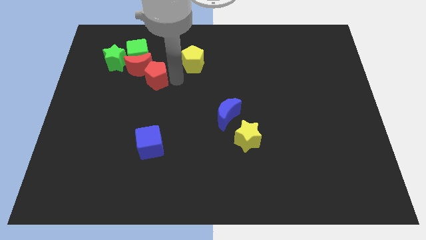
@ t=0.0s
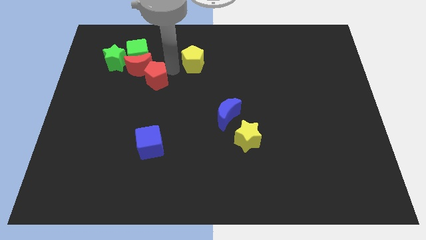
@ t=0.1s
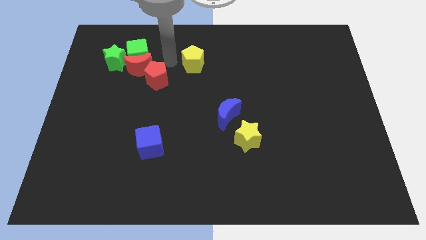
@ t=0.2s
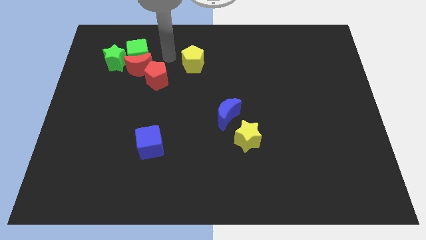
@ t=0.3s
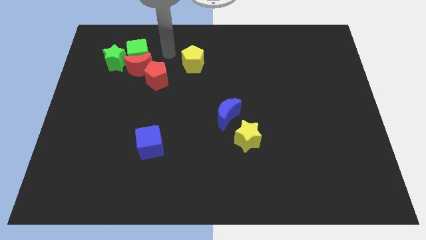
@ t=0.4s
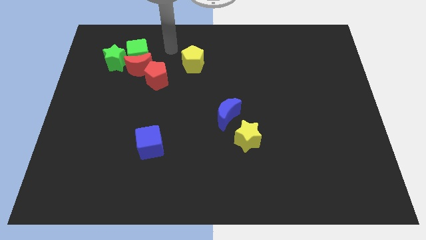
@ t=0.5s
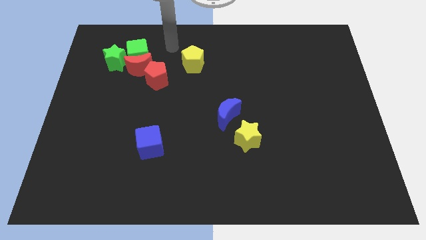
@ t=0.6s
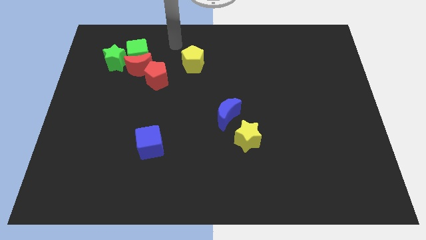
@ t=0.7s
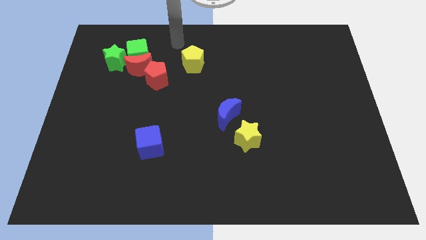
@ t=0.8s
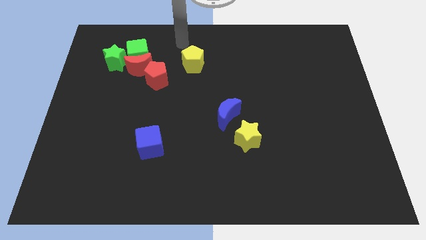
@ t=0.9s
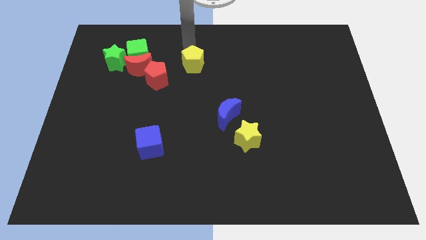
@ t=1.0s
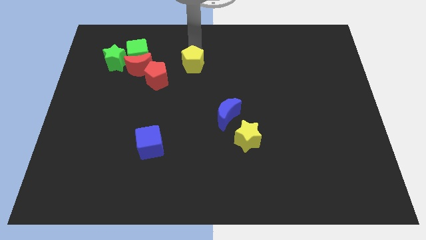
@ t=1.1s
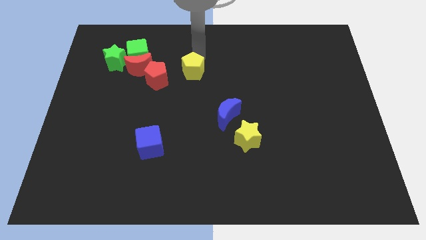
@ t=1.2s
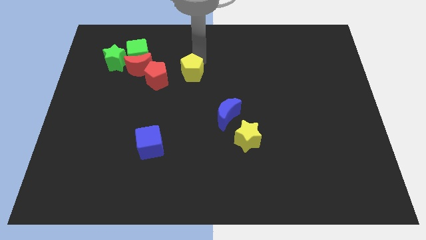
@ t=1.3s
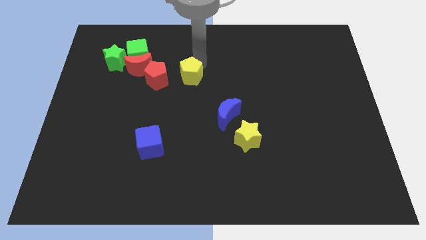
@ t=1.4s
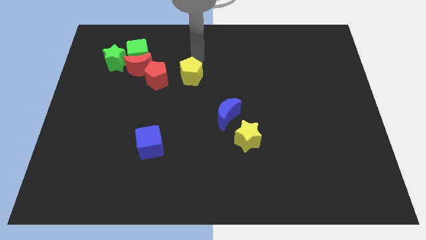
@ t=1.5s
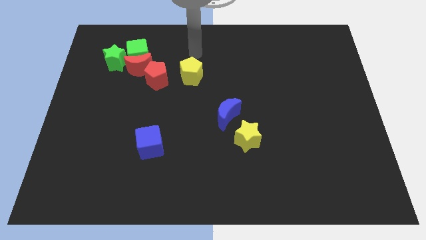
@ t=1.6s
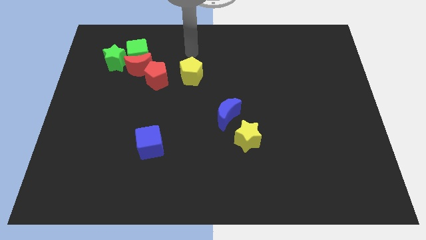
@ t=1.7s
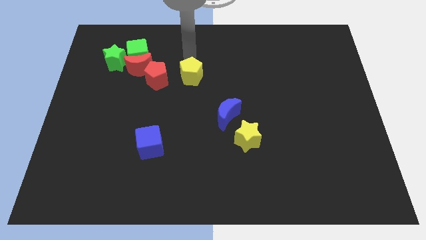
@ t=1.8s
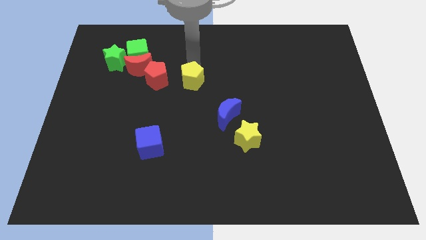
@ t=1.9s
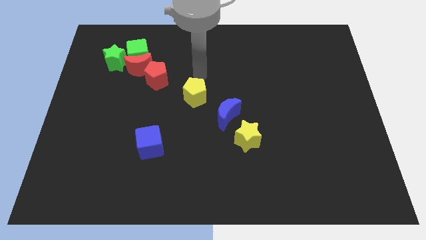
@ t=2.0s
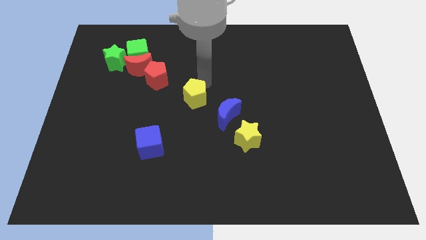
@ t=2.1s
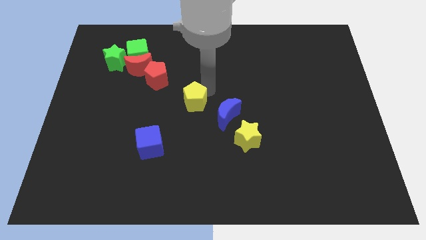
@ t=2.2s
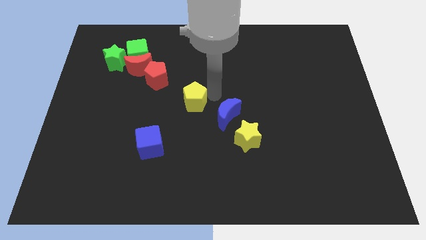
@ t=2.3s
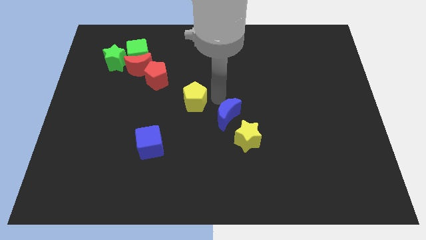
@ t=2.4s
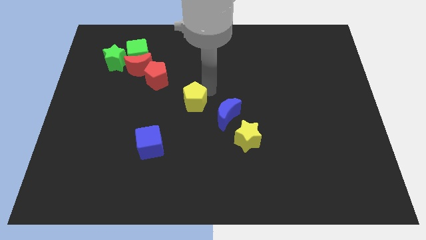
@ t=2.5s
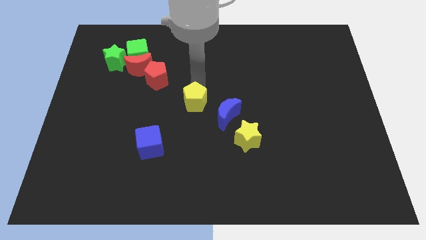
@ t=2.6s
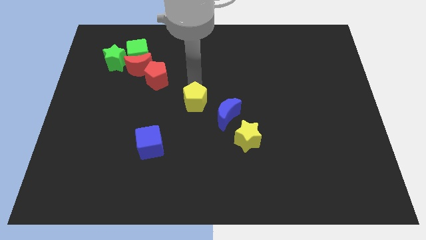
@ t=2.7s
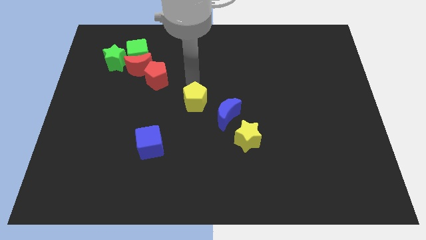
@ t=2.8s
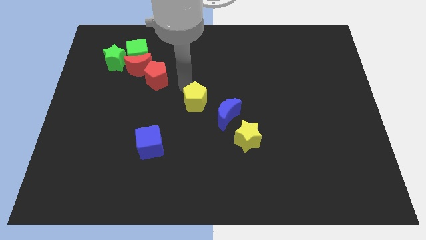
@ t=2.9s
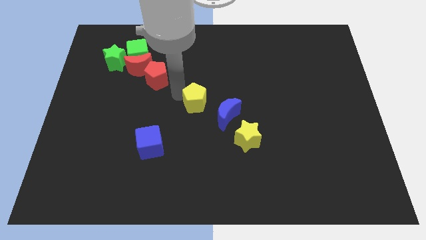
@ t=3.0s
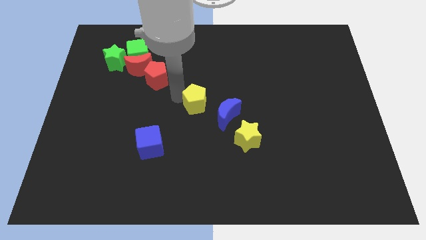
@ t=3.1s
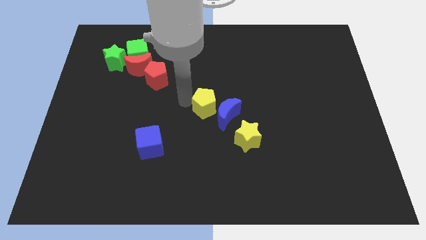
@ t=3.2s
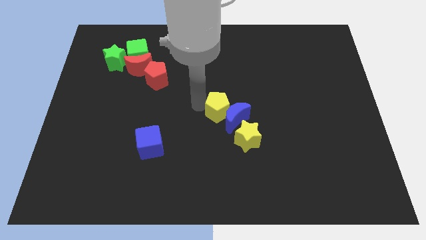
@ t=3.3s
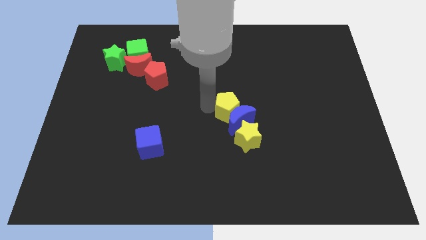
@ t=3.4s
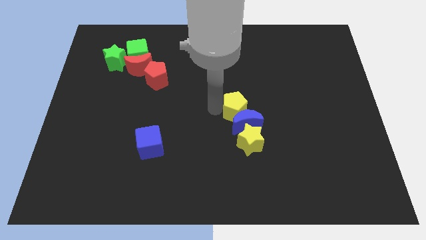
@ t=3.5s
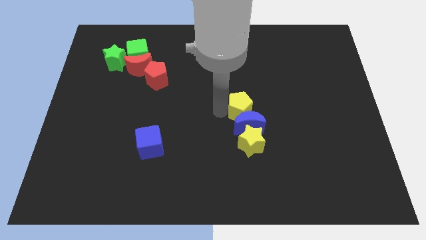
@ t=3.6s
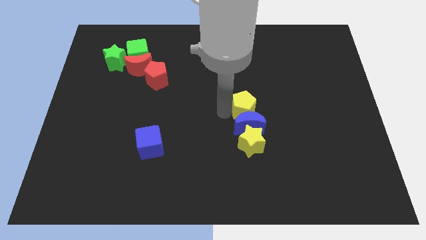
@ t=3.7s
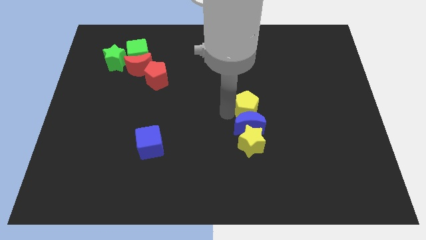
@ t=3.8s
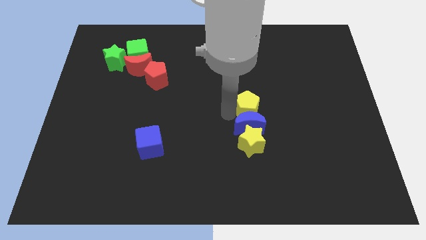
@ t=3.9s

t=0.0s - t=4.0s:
push the yellow pentagon to the top of the blue moon

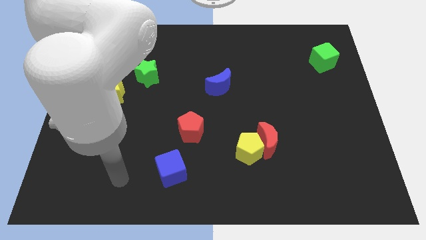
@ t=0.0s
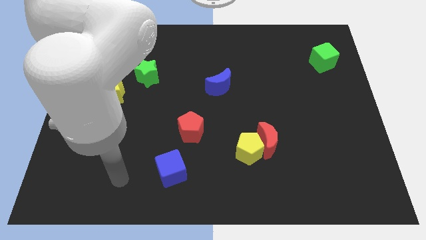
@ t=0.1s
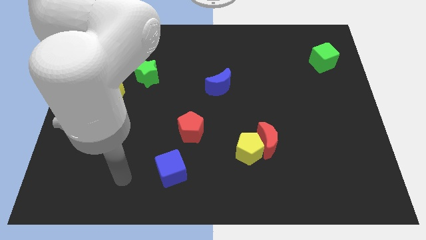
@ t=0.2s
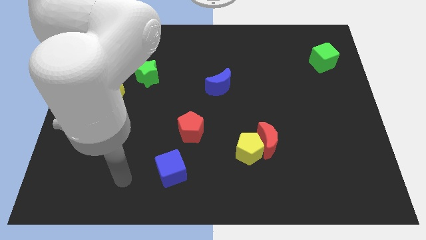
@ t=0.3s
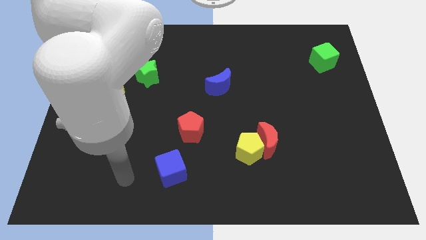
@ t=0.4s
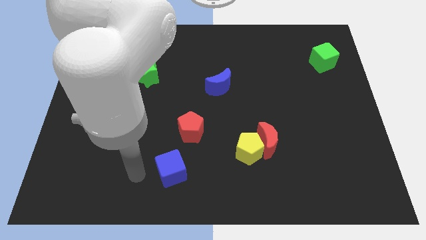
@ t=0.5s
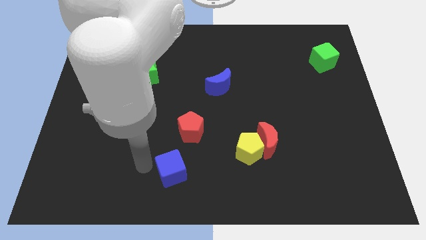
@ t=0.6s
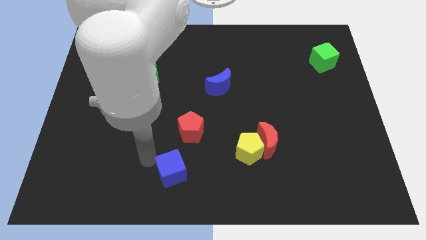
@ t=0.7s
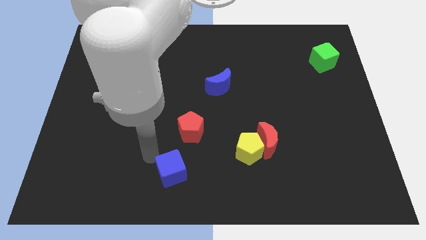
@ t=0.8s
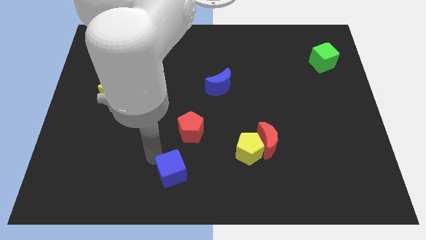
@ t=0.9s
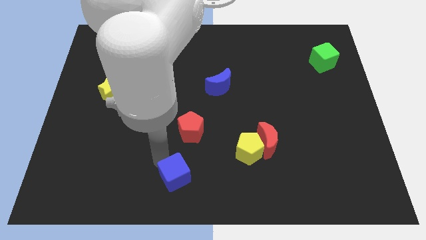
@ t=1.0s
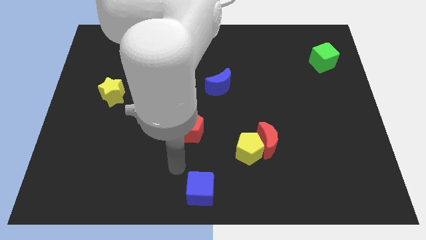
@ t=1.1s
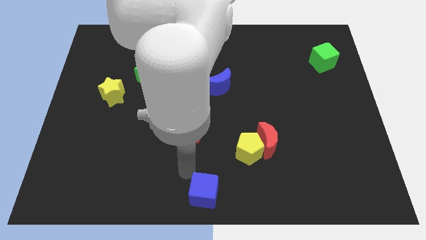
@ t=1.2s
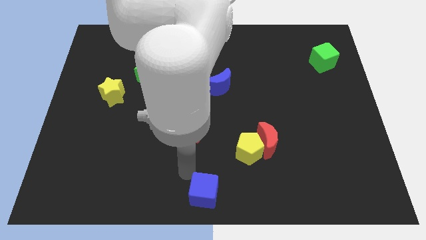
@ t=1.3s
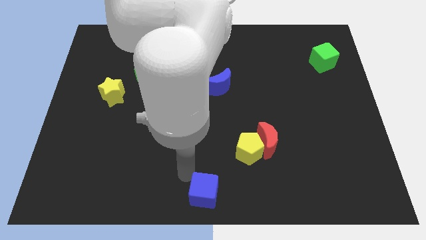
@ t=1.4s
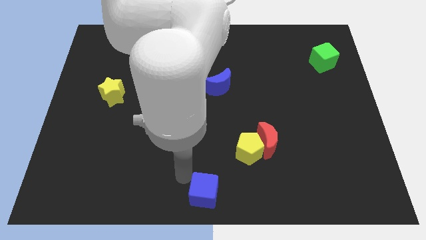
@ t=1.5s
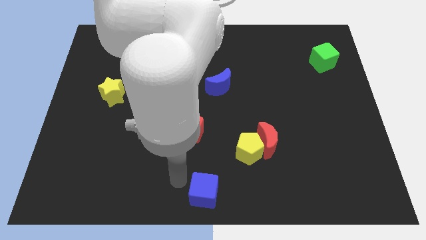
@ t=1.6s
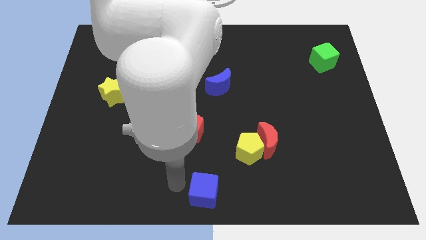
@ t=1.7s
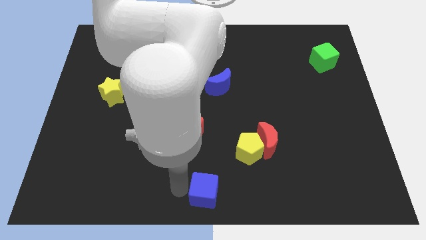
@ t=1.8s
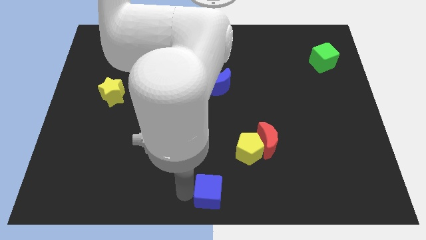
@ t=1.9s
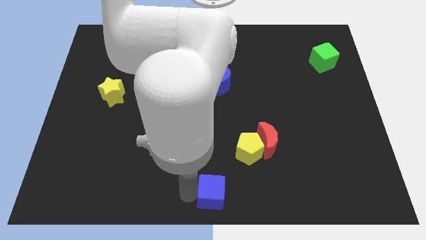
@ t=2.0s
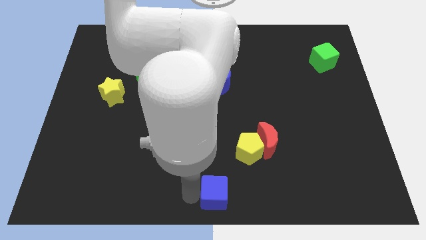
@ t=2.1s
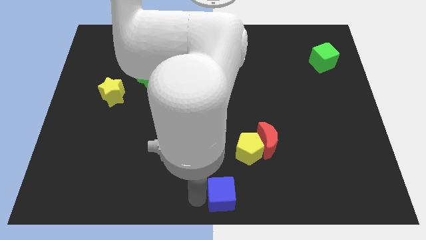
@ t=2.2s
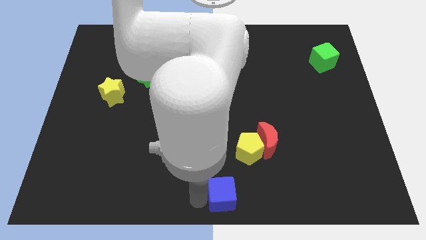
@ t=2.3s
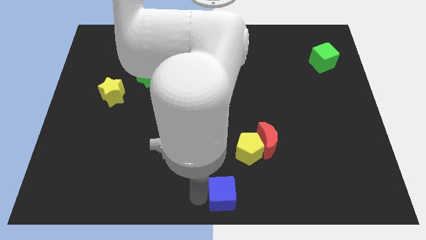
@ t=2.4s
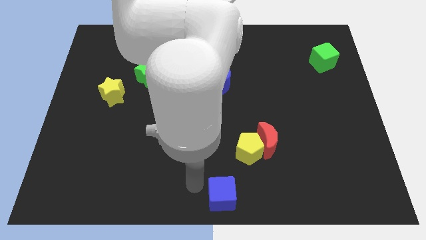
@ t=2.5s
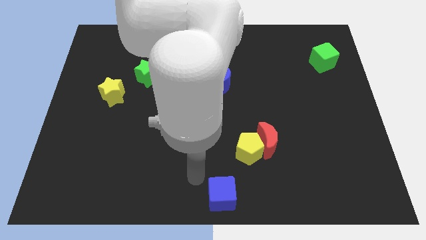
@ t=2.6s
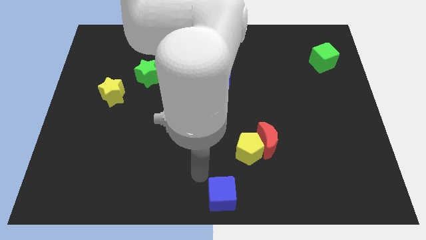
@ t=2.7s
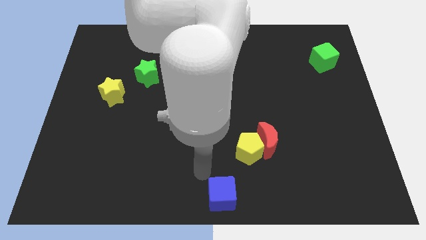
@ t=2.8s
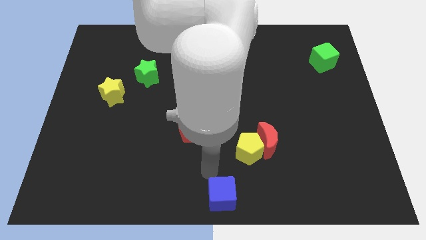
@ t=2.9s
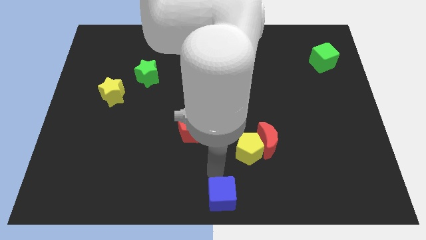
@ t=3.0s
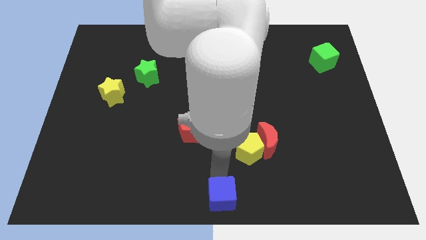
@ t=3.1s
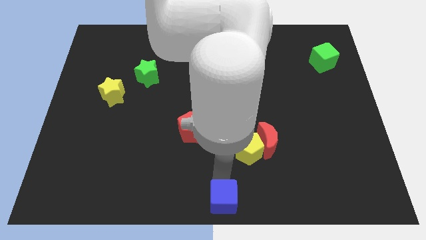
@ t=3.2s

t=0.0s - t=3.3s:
place the blue cube at the bottom center of the board

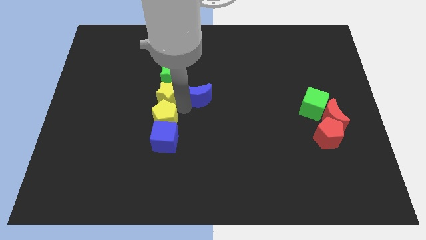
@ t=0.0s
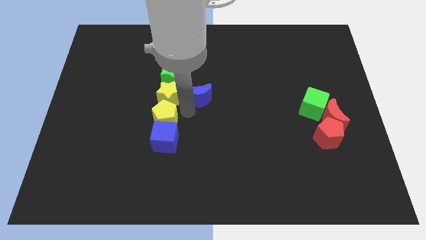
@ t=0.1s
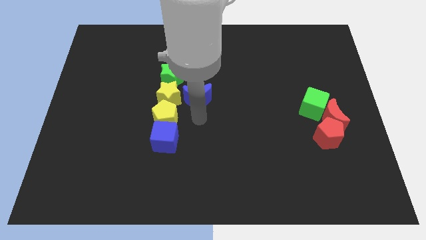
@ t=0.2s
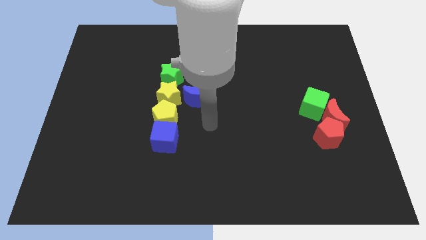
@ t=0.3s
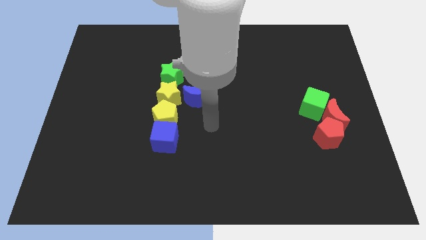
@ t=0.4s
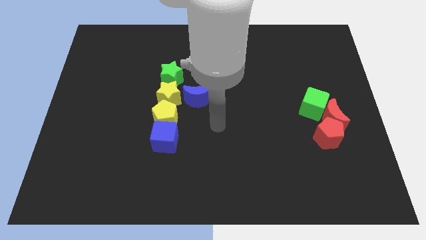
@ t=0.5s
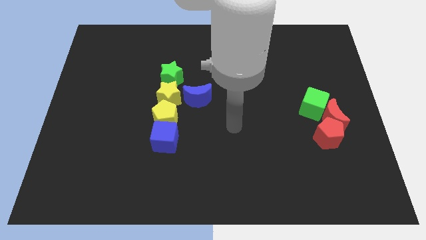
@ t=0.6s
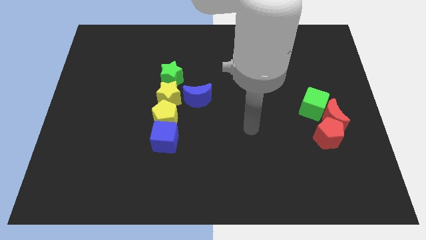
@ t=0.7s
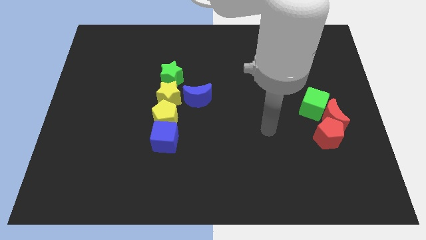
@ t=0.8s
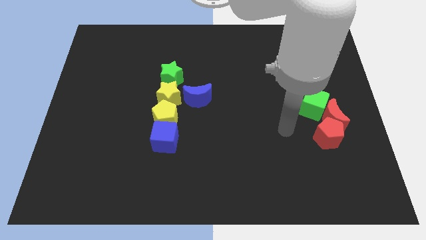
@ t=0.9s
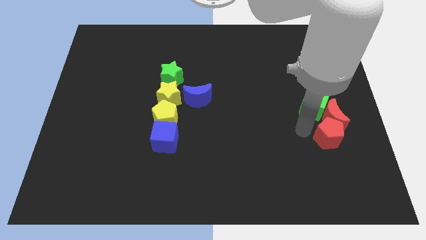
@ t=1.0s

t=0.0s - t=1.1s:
move your arm away from the blue moon

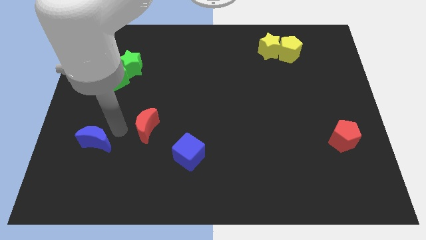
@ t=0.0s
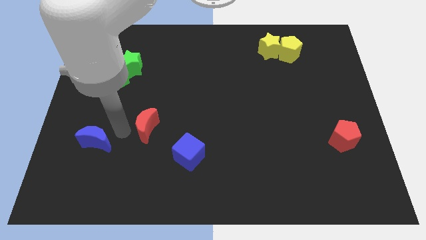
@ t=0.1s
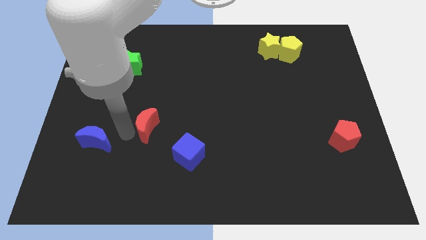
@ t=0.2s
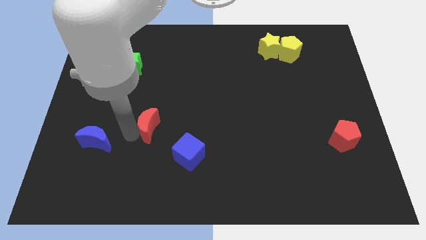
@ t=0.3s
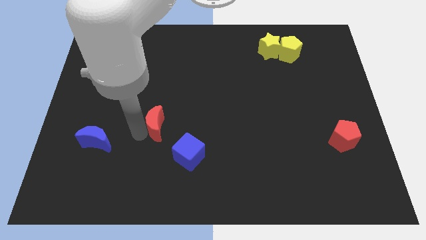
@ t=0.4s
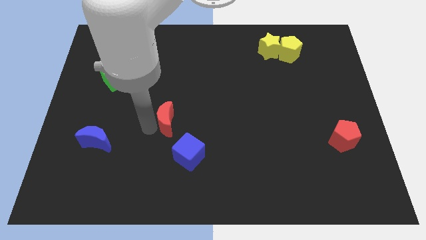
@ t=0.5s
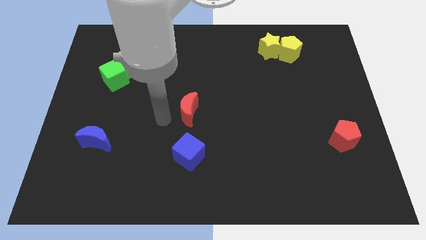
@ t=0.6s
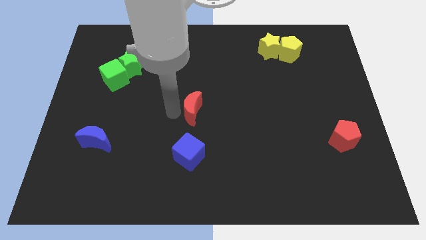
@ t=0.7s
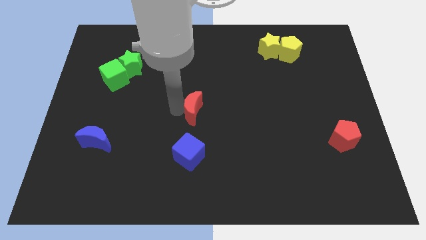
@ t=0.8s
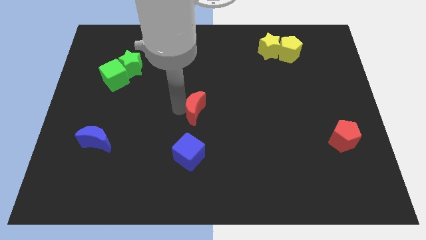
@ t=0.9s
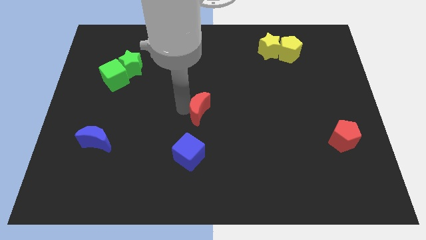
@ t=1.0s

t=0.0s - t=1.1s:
place the red moon at the center of the board
